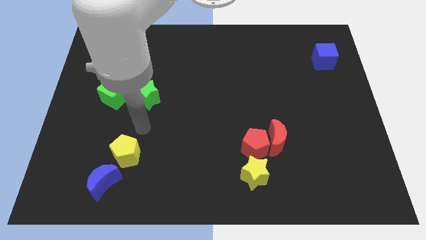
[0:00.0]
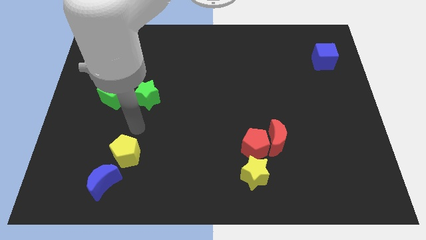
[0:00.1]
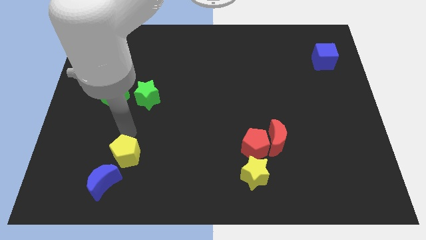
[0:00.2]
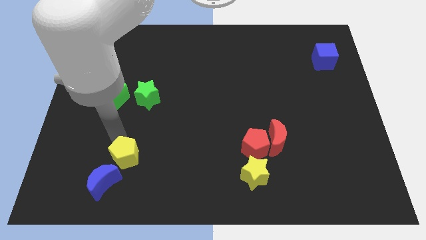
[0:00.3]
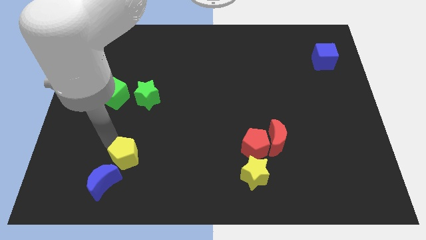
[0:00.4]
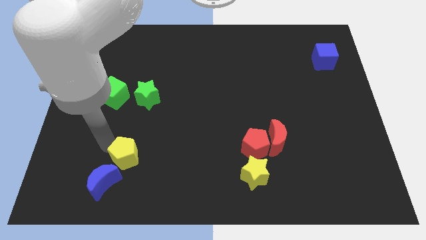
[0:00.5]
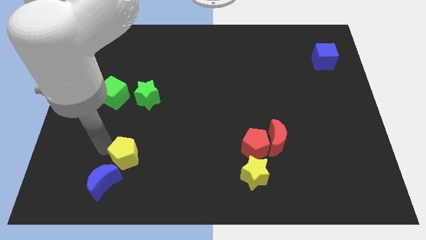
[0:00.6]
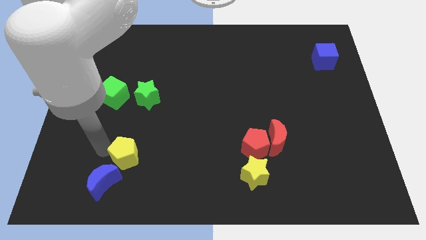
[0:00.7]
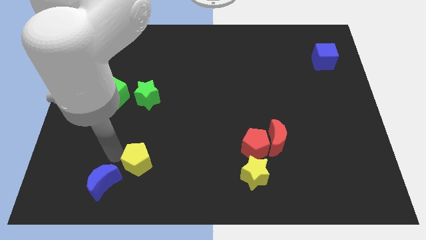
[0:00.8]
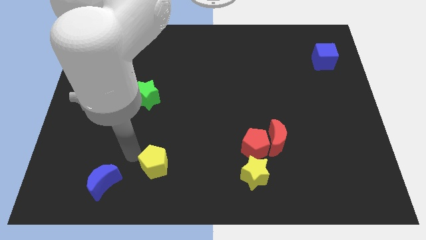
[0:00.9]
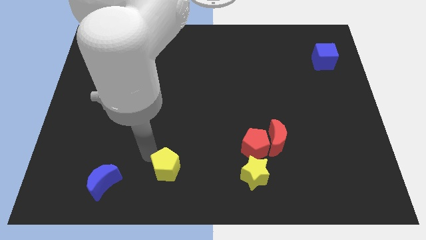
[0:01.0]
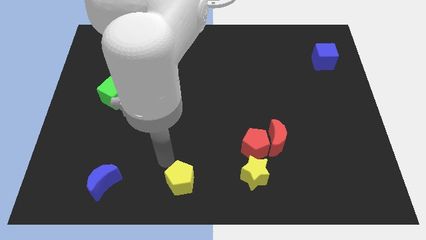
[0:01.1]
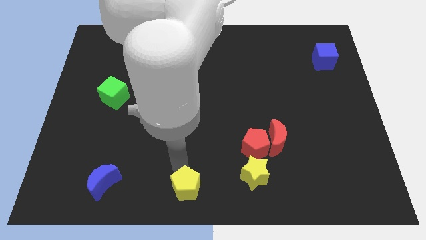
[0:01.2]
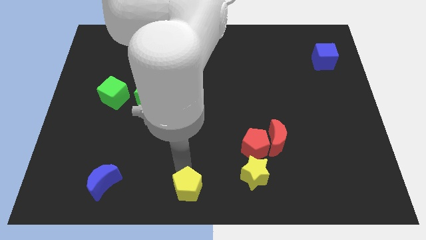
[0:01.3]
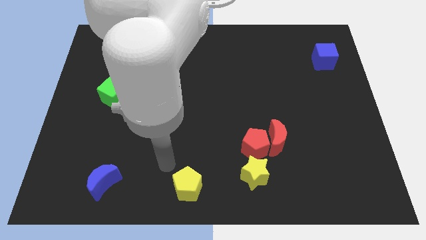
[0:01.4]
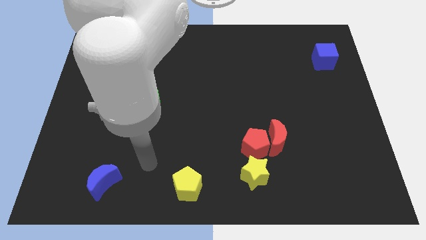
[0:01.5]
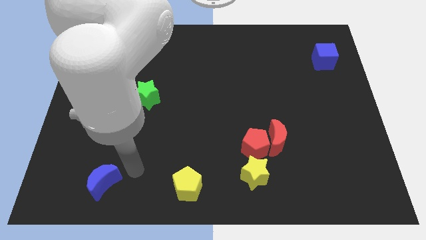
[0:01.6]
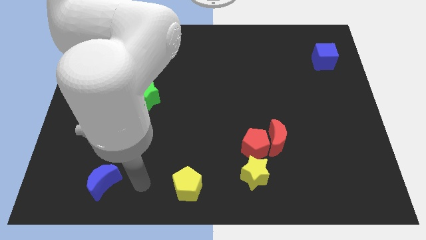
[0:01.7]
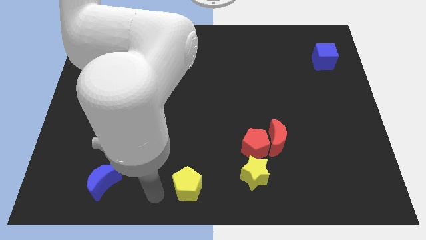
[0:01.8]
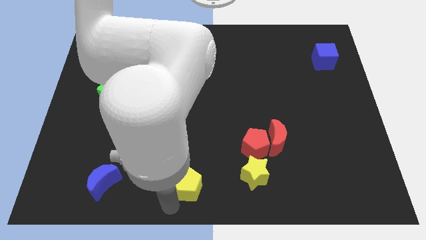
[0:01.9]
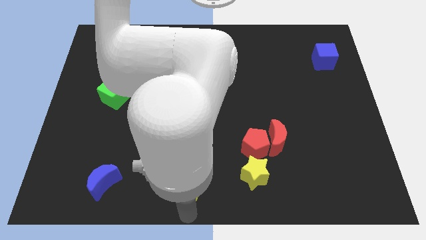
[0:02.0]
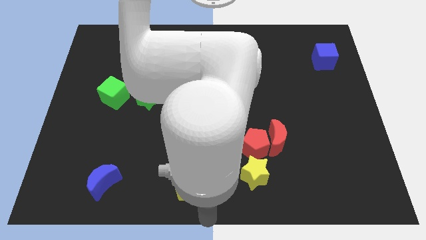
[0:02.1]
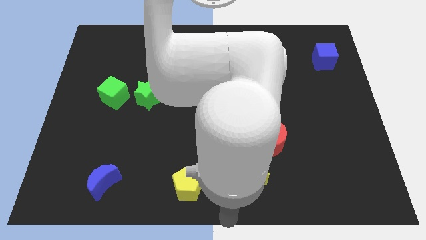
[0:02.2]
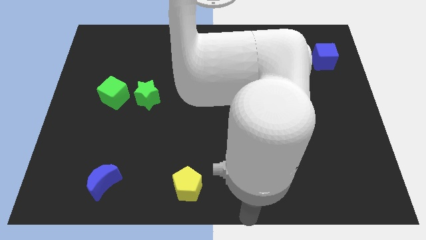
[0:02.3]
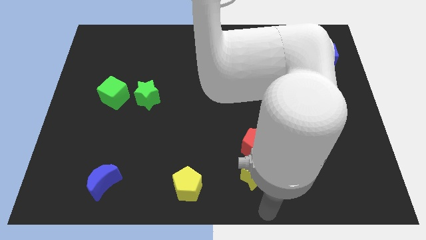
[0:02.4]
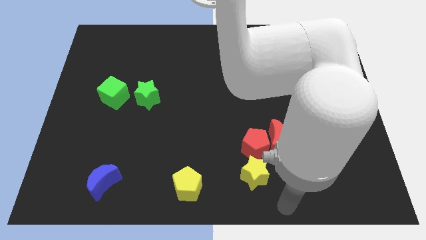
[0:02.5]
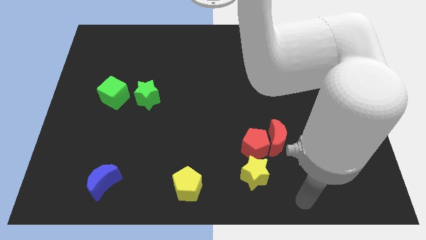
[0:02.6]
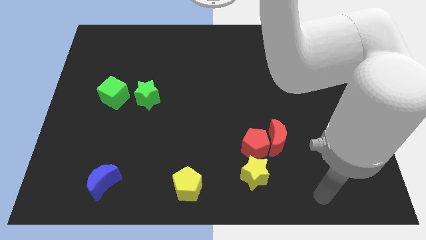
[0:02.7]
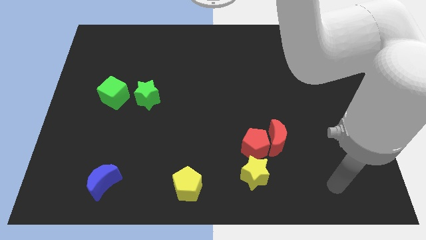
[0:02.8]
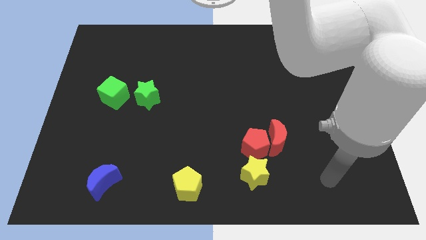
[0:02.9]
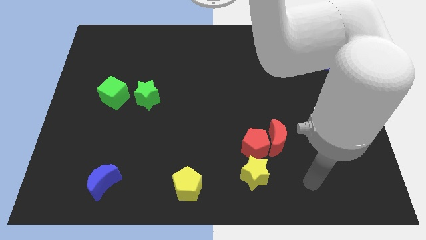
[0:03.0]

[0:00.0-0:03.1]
place yellow pentagon in the bottom center

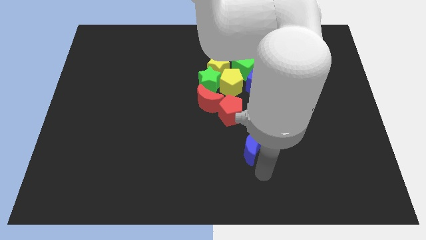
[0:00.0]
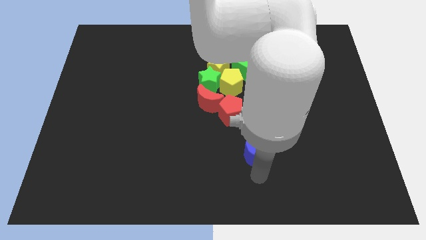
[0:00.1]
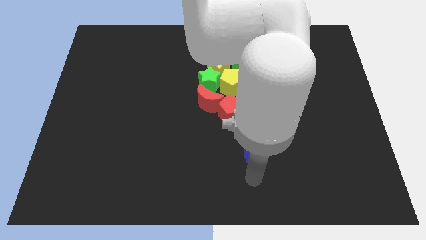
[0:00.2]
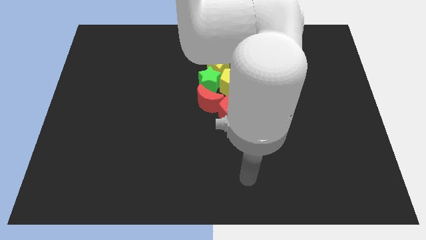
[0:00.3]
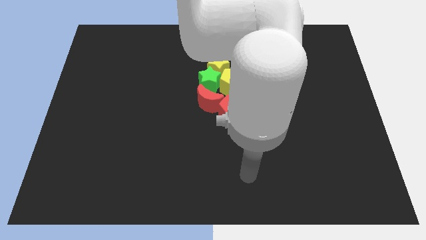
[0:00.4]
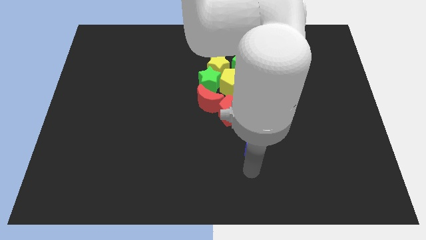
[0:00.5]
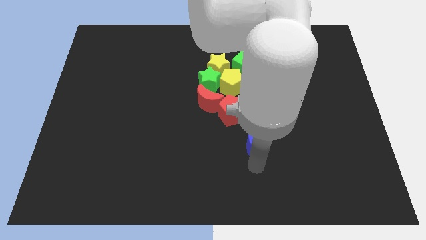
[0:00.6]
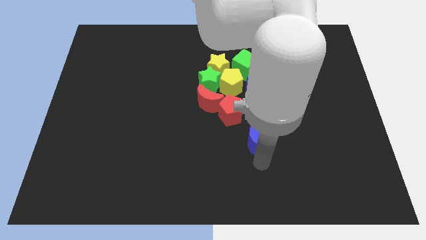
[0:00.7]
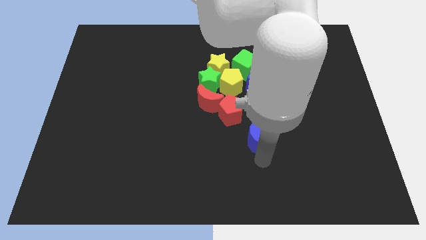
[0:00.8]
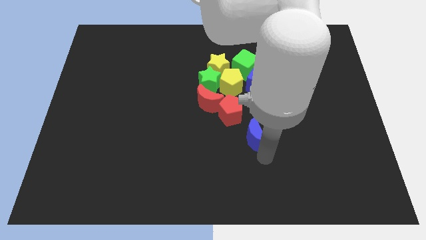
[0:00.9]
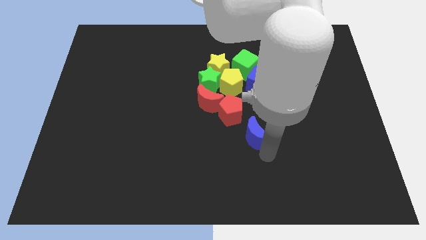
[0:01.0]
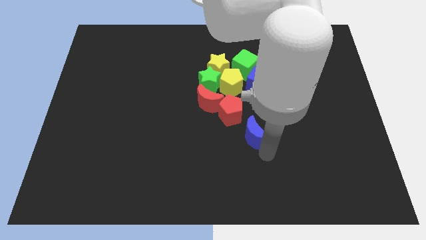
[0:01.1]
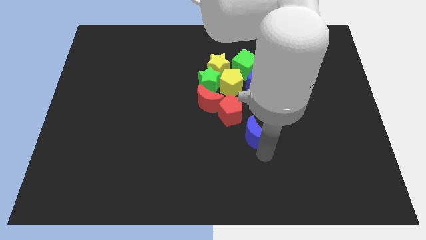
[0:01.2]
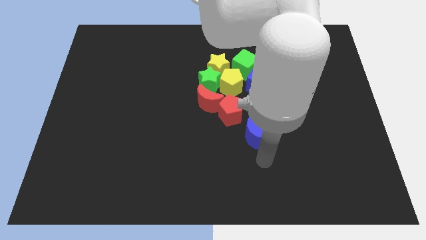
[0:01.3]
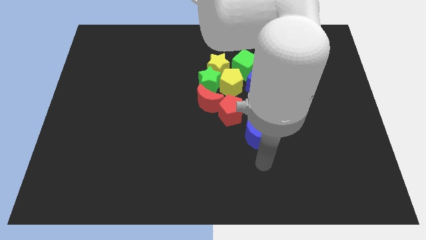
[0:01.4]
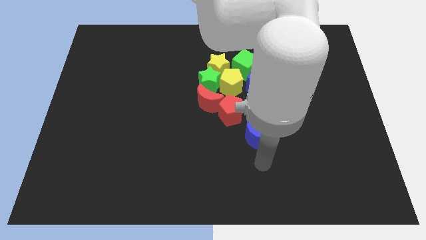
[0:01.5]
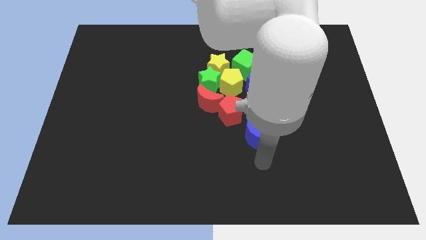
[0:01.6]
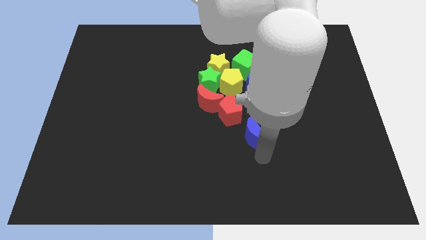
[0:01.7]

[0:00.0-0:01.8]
move the blue crescent towards the group of blocks

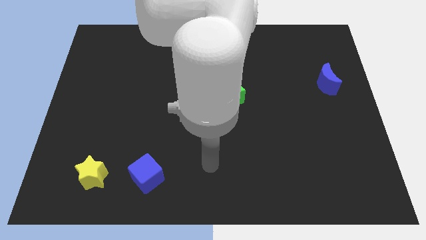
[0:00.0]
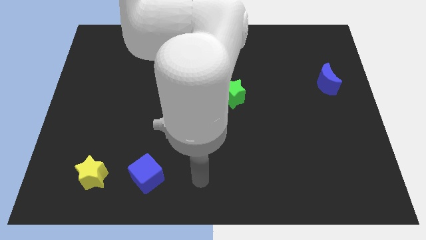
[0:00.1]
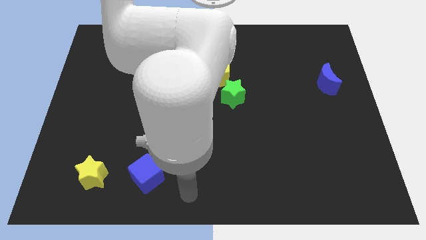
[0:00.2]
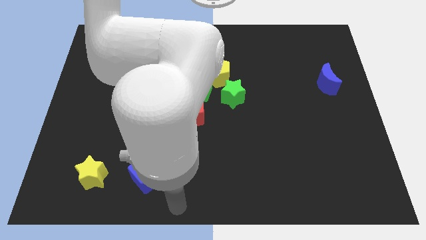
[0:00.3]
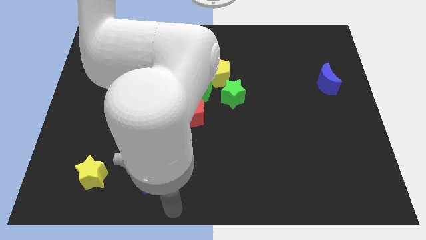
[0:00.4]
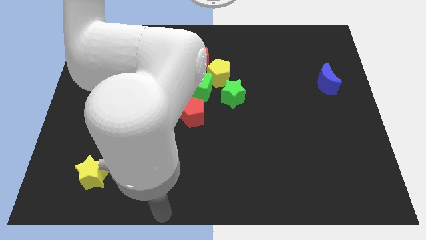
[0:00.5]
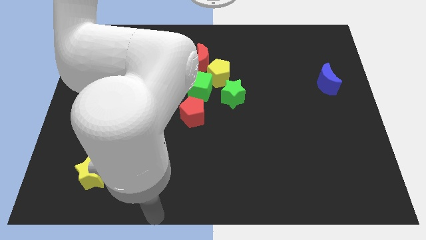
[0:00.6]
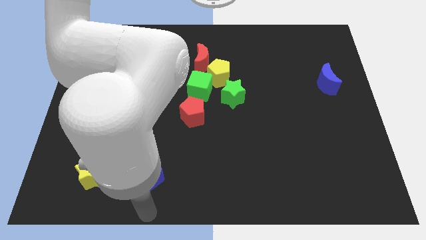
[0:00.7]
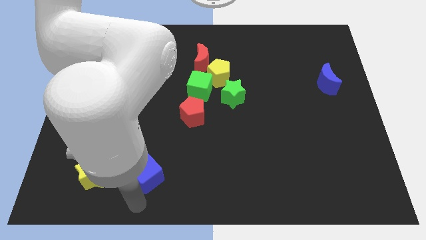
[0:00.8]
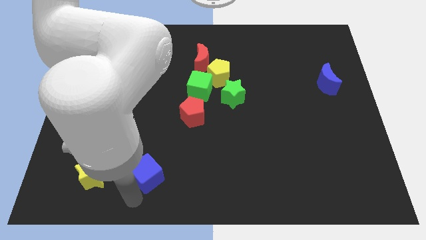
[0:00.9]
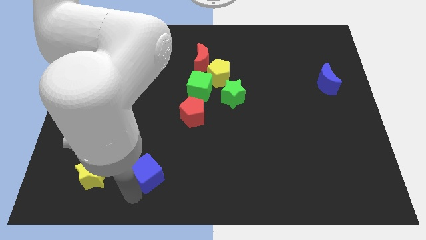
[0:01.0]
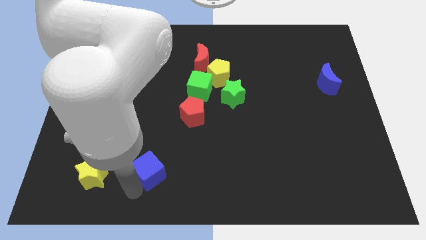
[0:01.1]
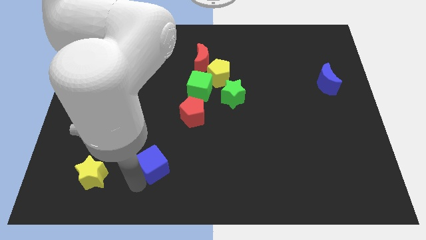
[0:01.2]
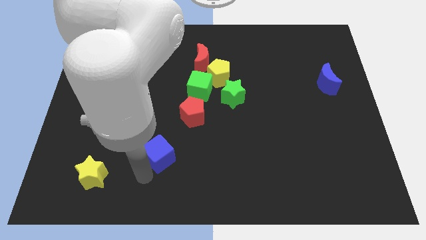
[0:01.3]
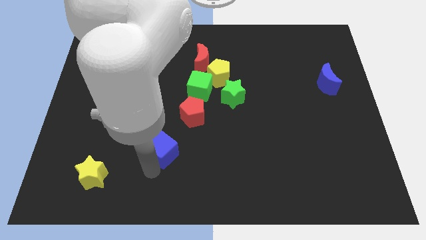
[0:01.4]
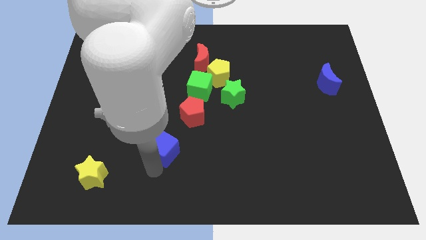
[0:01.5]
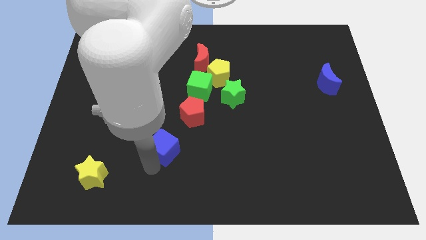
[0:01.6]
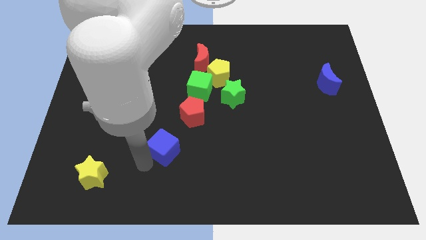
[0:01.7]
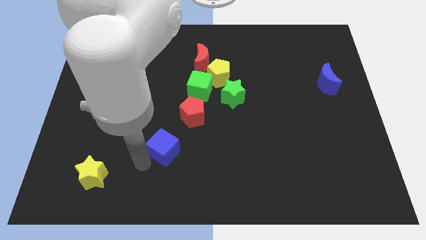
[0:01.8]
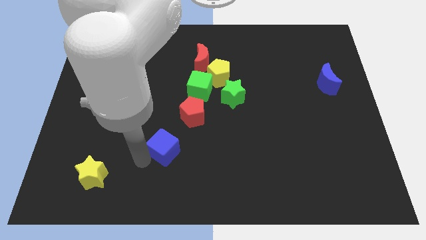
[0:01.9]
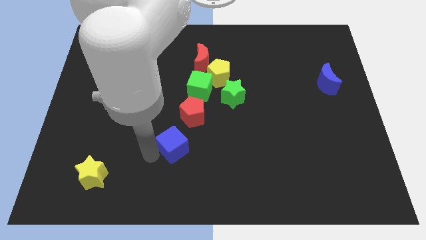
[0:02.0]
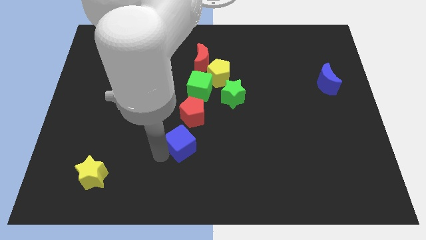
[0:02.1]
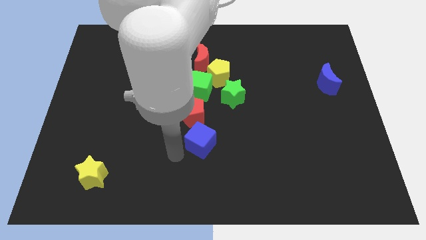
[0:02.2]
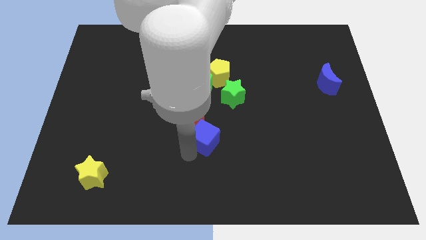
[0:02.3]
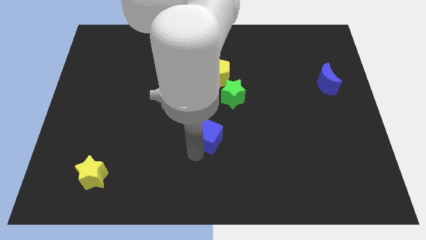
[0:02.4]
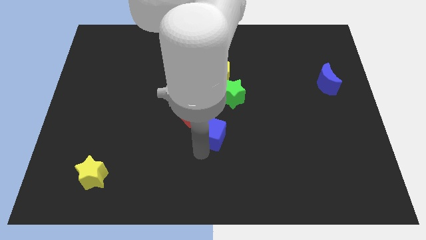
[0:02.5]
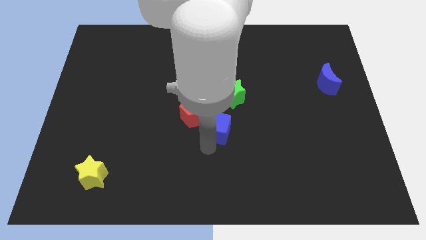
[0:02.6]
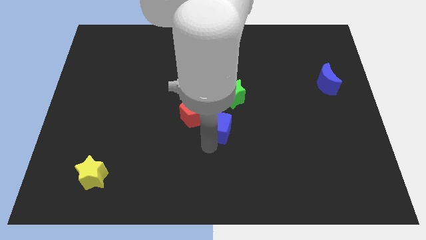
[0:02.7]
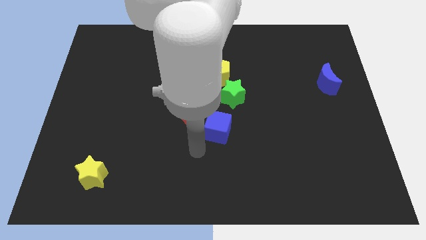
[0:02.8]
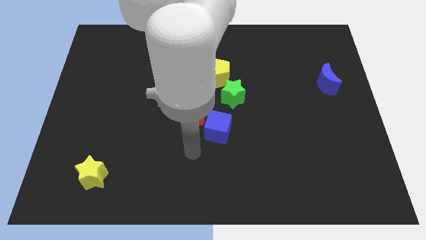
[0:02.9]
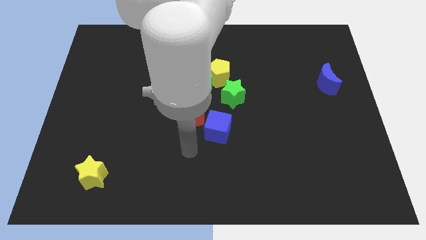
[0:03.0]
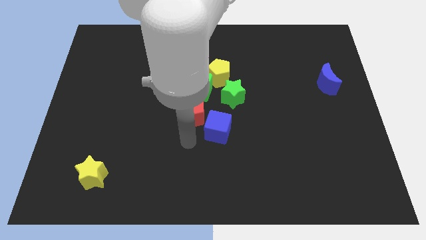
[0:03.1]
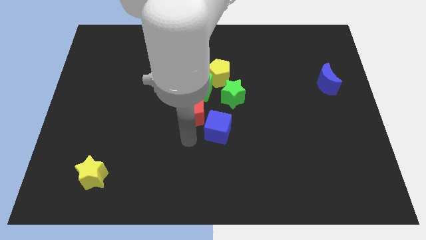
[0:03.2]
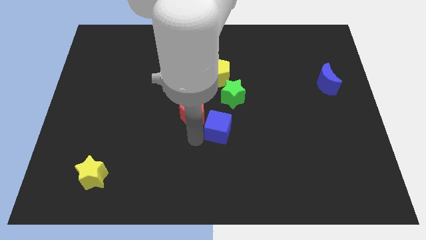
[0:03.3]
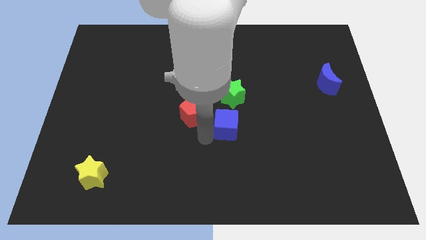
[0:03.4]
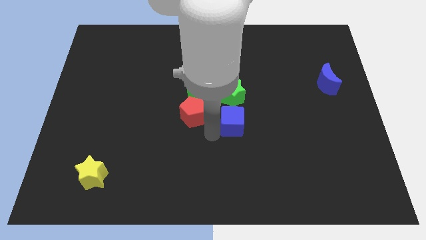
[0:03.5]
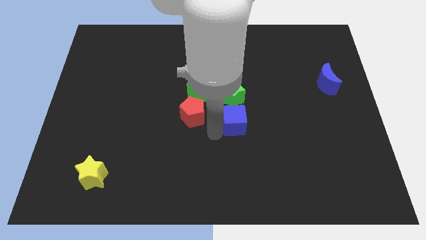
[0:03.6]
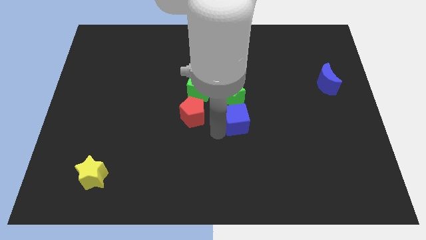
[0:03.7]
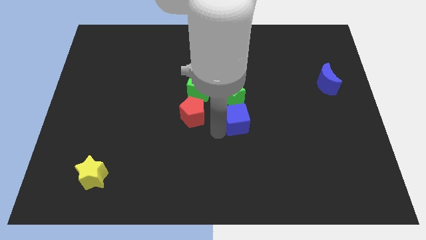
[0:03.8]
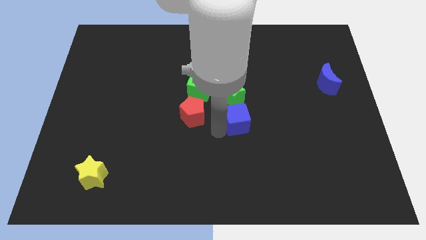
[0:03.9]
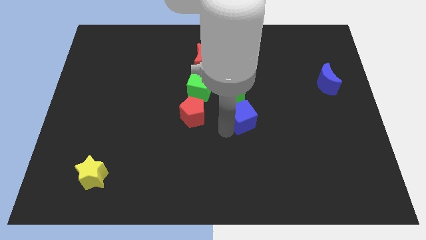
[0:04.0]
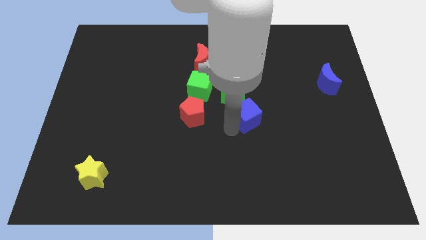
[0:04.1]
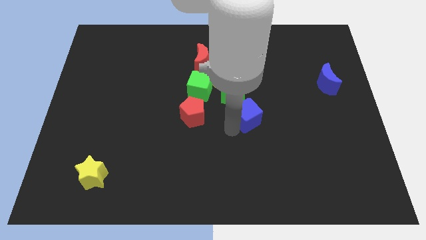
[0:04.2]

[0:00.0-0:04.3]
move the blue cube towards the green star
